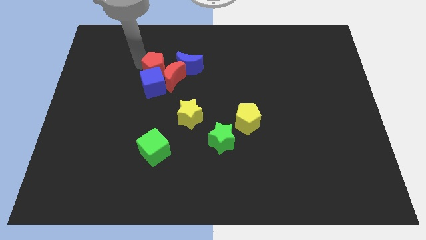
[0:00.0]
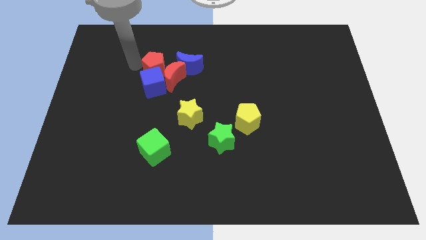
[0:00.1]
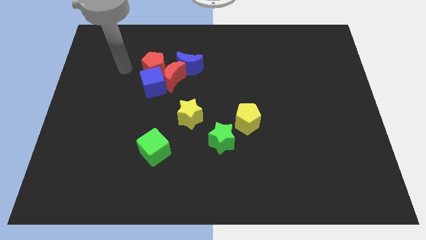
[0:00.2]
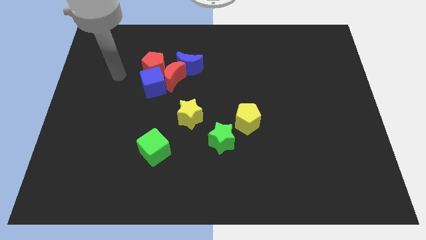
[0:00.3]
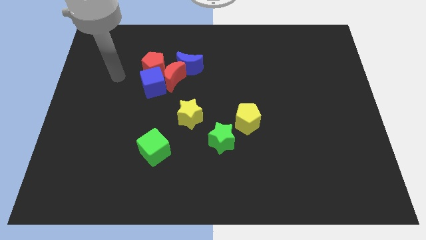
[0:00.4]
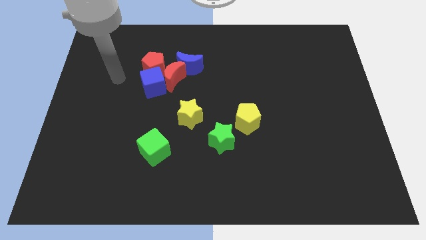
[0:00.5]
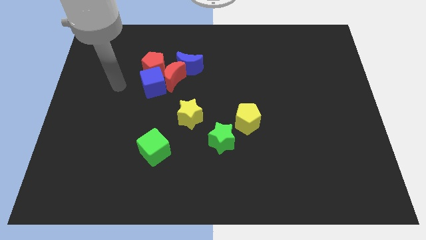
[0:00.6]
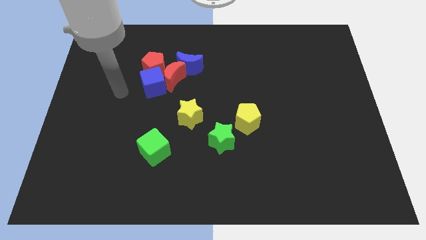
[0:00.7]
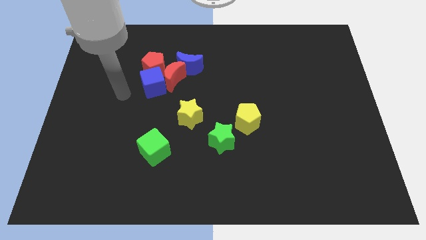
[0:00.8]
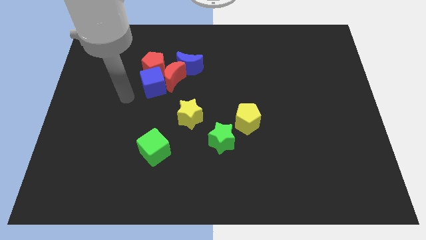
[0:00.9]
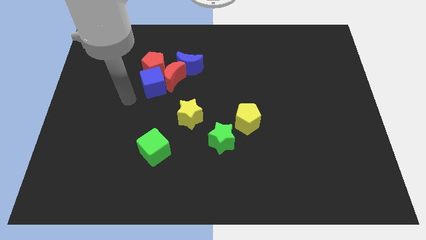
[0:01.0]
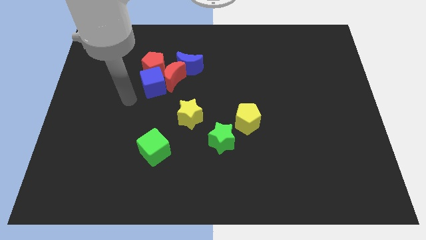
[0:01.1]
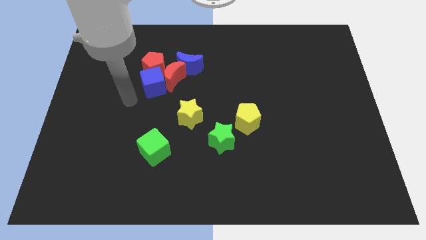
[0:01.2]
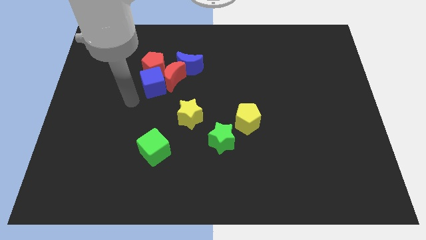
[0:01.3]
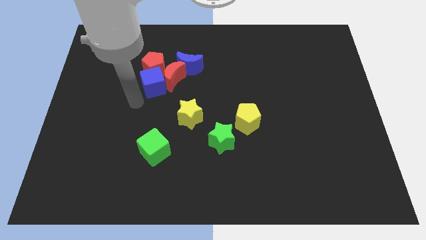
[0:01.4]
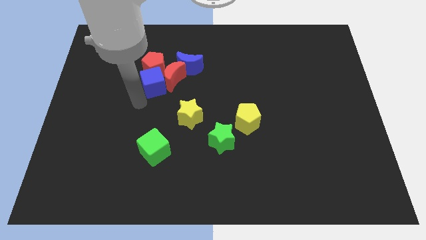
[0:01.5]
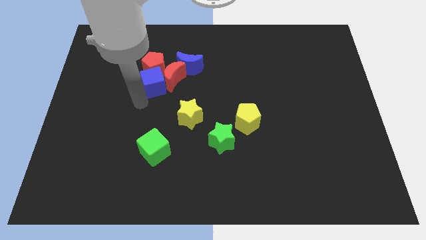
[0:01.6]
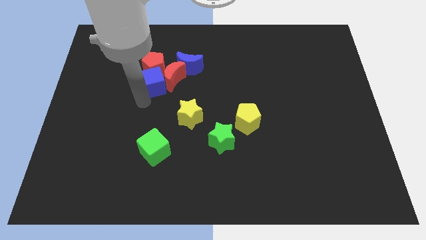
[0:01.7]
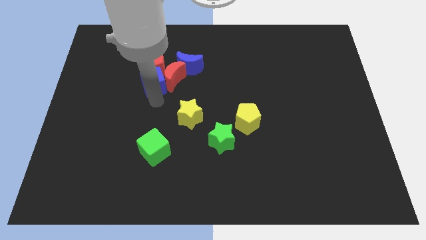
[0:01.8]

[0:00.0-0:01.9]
point your arm at the bottom of blue cube

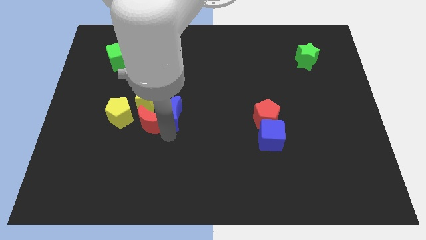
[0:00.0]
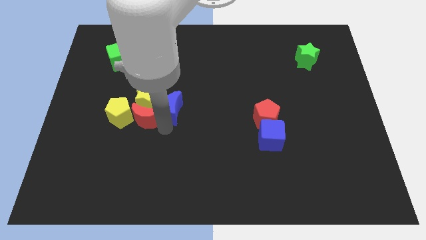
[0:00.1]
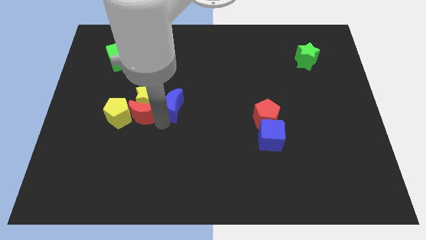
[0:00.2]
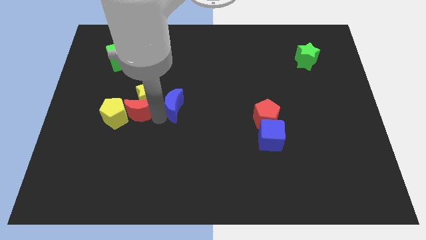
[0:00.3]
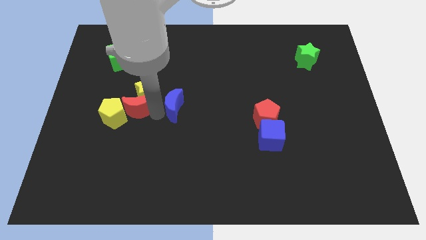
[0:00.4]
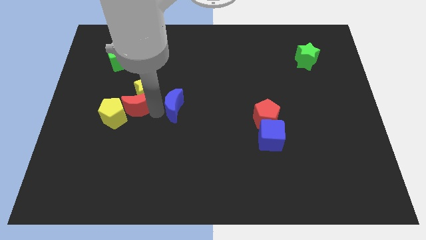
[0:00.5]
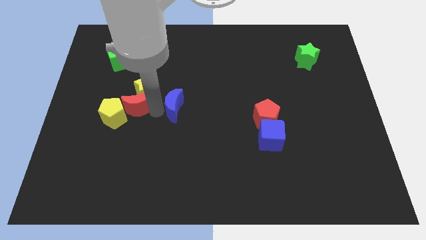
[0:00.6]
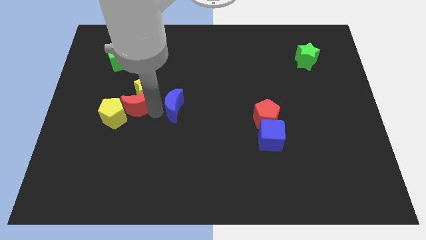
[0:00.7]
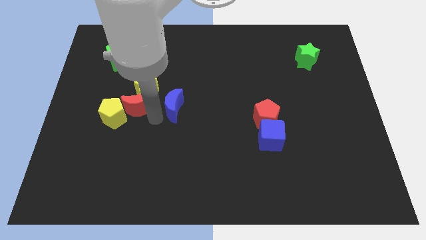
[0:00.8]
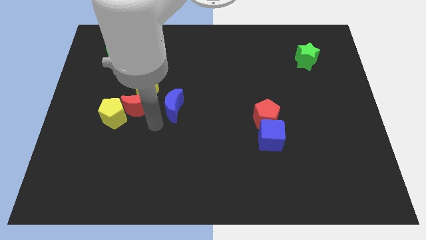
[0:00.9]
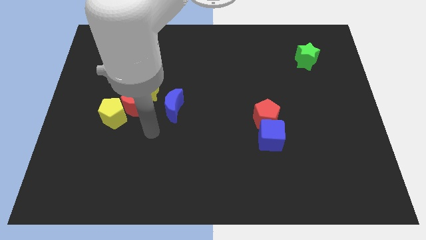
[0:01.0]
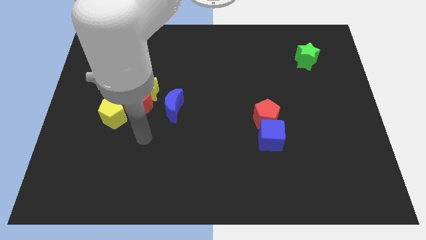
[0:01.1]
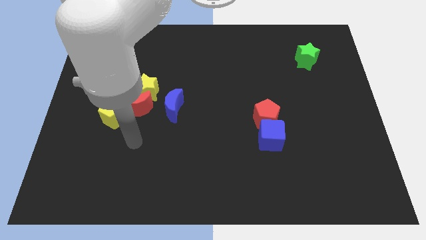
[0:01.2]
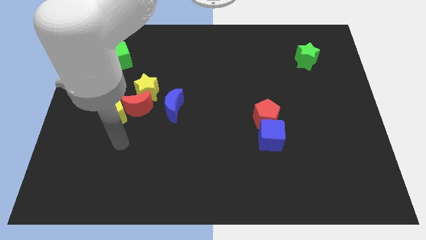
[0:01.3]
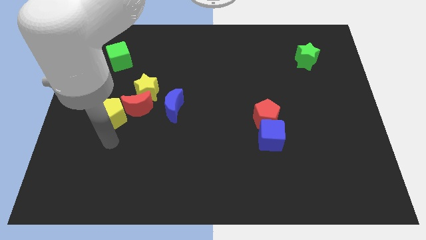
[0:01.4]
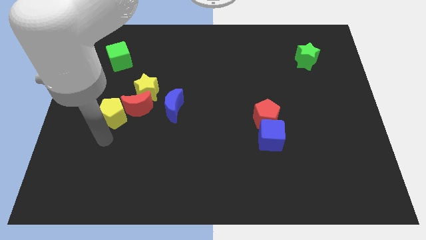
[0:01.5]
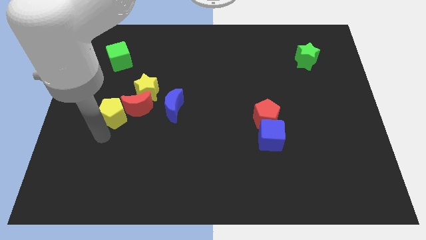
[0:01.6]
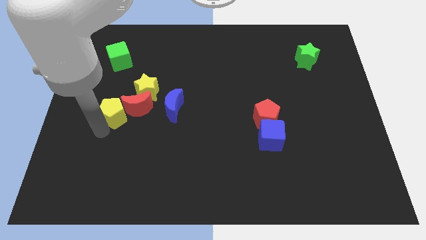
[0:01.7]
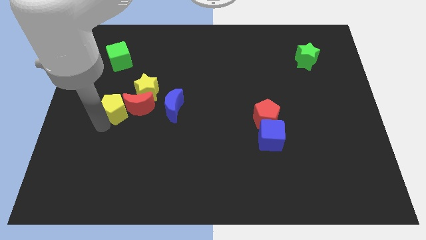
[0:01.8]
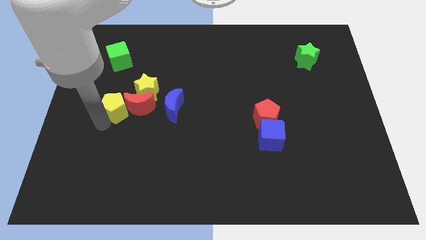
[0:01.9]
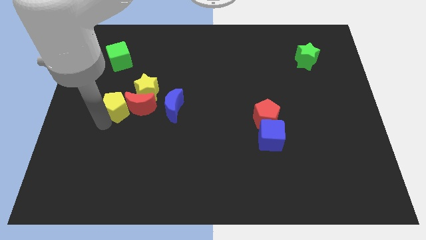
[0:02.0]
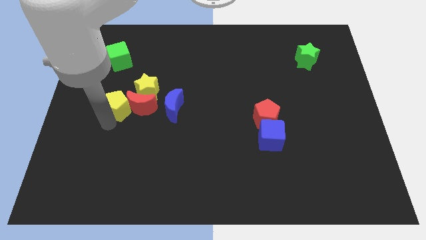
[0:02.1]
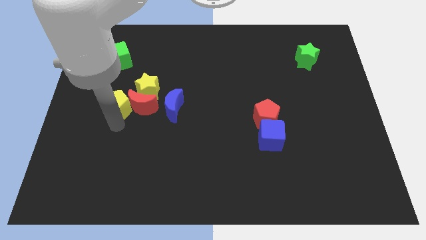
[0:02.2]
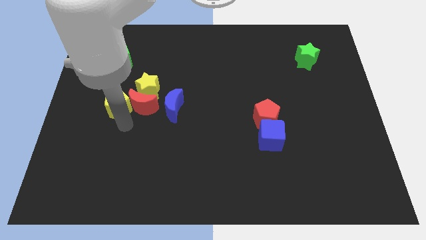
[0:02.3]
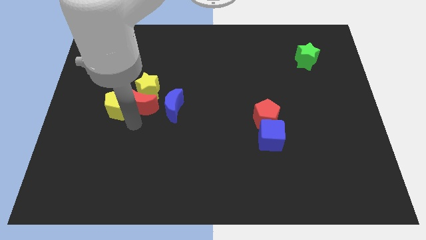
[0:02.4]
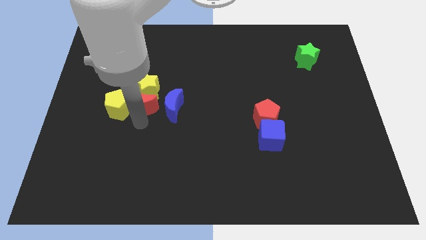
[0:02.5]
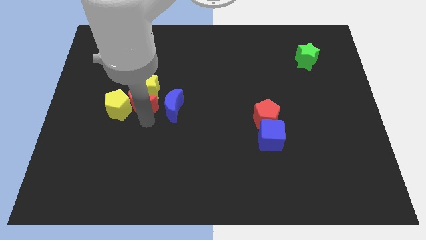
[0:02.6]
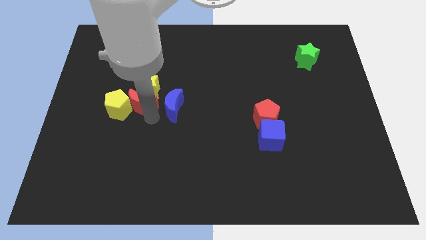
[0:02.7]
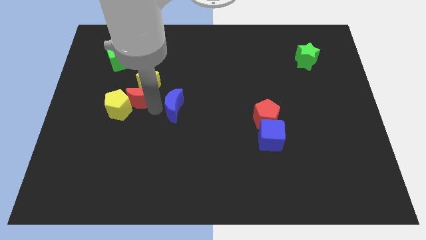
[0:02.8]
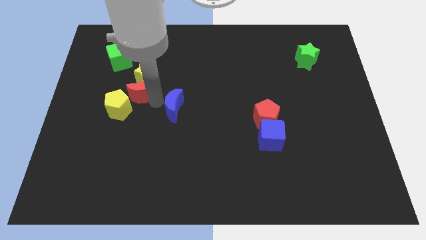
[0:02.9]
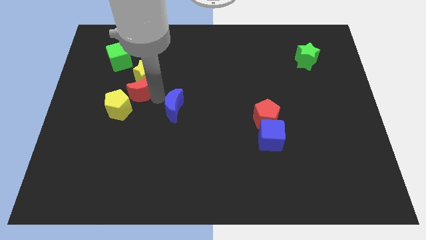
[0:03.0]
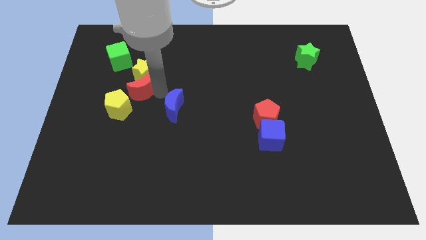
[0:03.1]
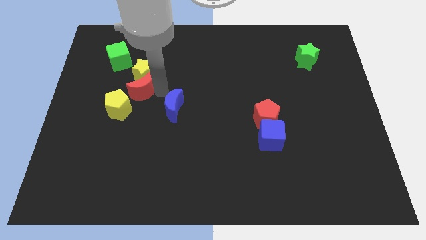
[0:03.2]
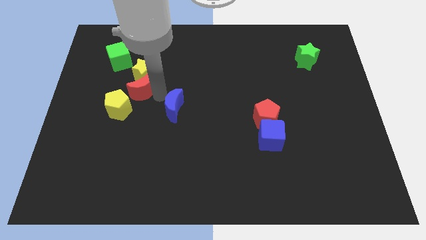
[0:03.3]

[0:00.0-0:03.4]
move the yellow star and the red moon towards the top left

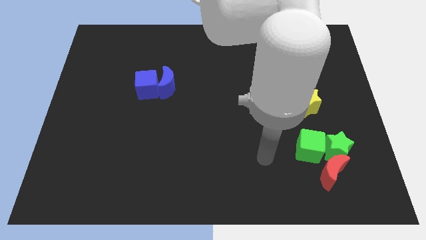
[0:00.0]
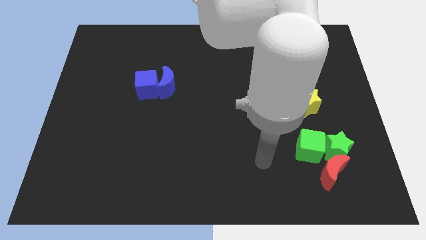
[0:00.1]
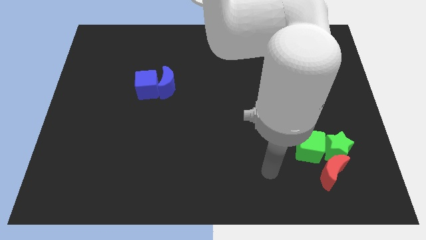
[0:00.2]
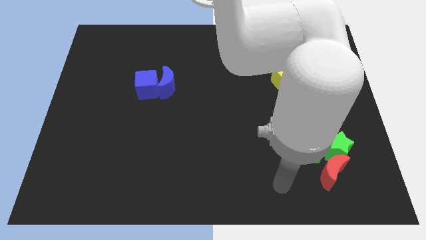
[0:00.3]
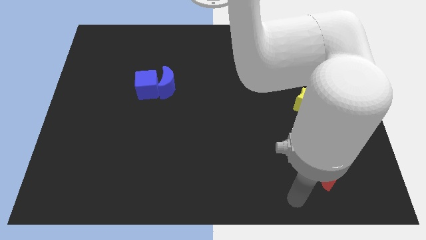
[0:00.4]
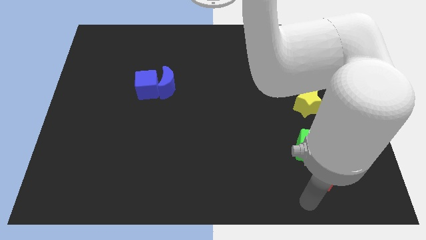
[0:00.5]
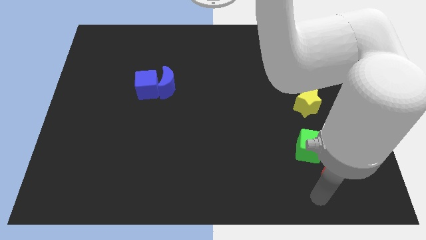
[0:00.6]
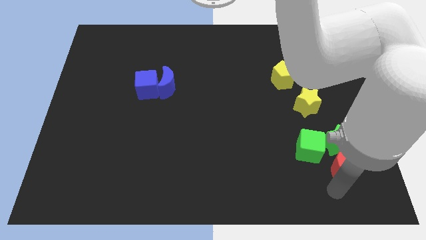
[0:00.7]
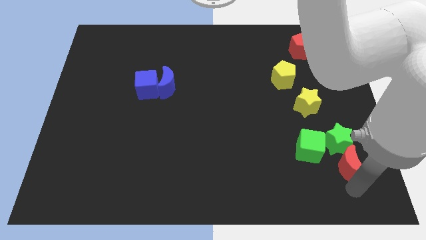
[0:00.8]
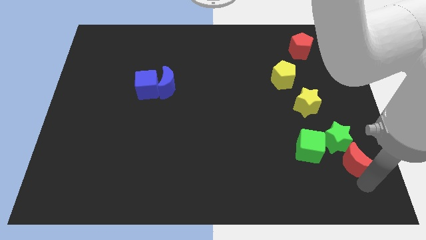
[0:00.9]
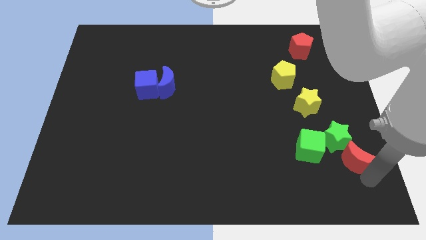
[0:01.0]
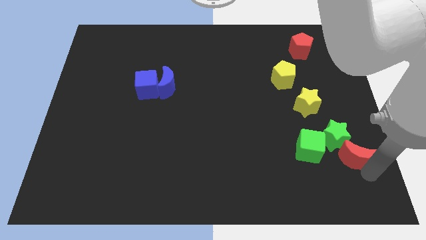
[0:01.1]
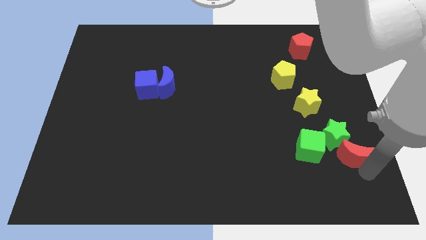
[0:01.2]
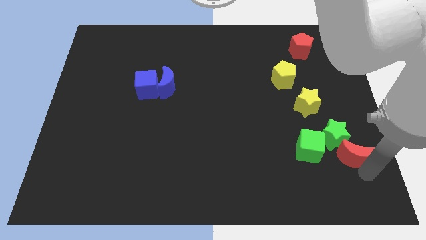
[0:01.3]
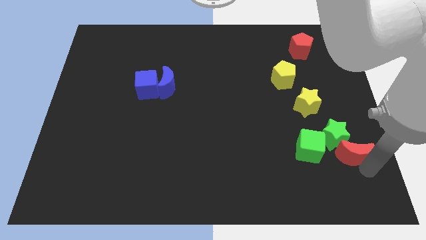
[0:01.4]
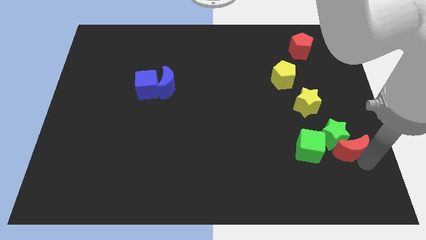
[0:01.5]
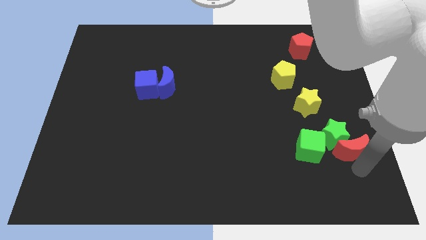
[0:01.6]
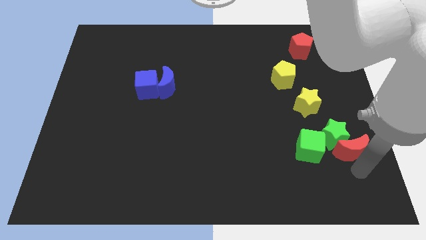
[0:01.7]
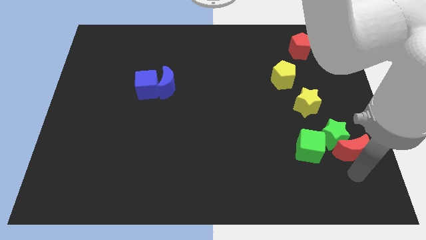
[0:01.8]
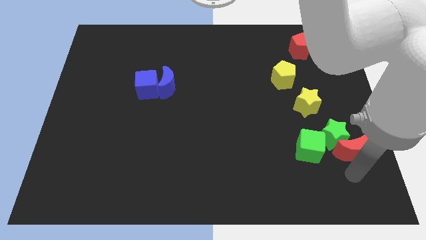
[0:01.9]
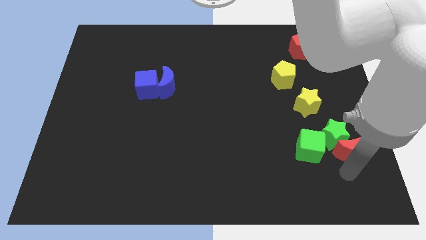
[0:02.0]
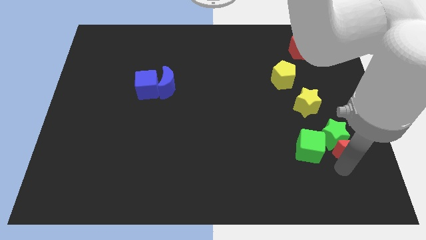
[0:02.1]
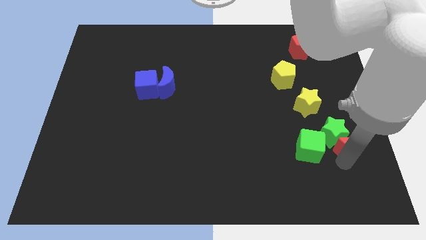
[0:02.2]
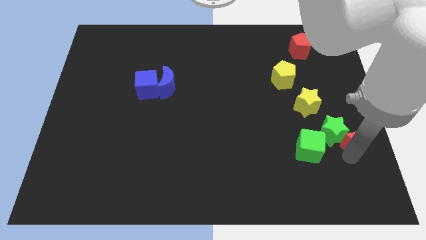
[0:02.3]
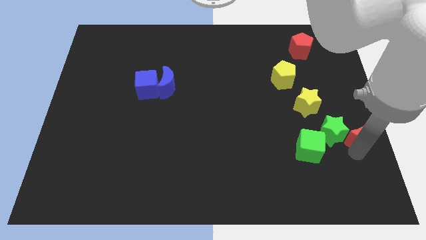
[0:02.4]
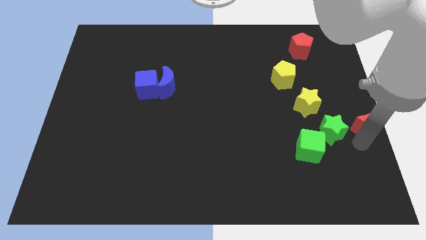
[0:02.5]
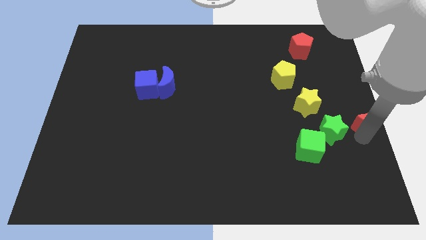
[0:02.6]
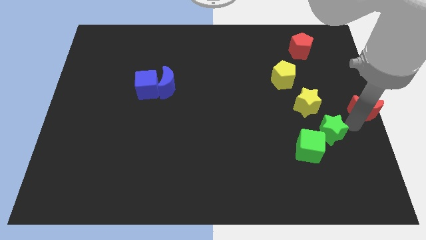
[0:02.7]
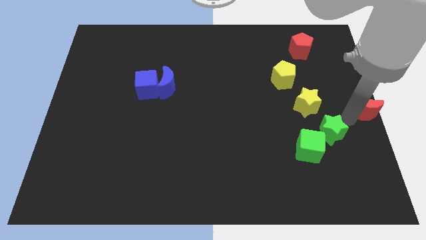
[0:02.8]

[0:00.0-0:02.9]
push the red crescent to the right center of the board

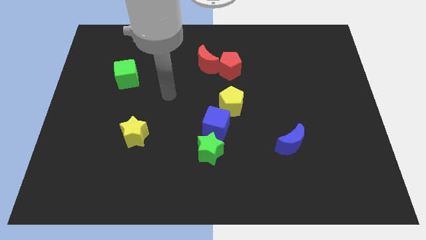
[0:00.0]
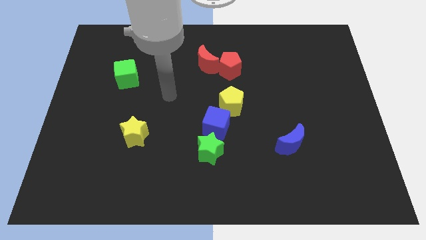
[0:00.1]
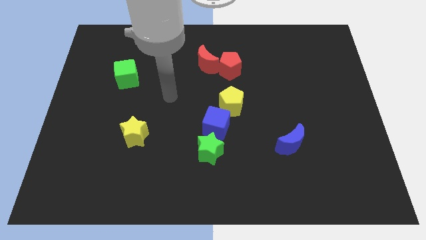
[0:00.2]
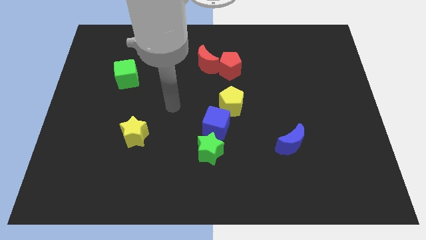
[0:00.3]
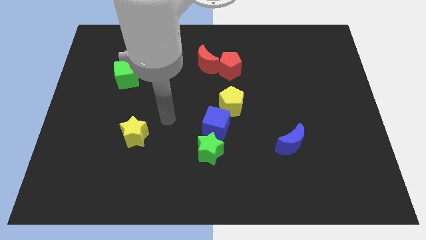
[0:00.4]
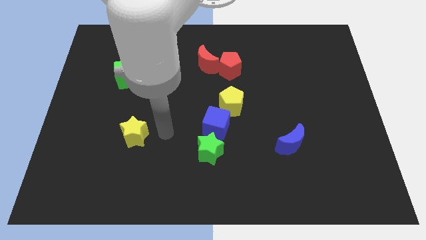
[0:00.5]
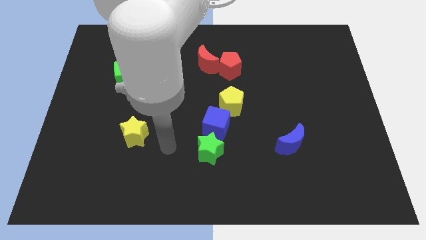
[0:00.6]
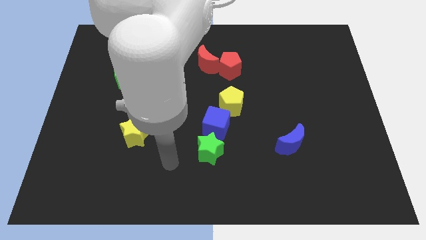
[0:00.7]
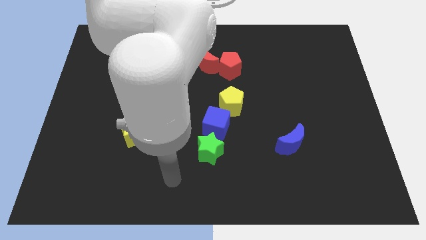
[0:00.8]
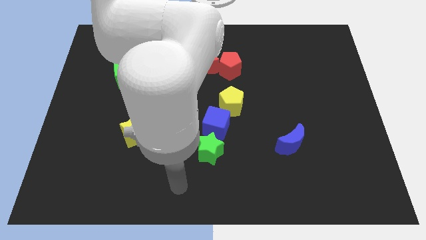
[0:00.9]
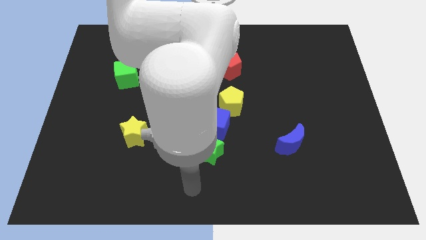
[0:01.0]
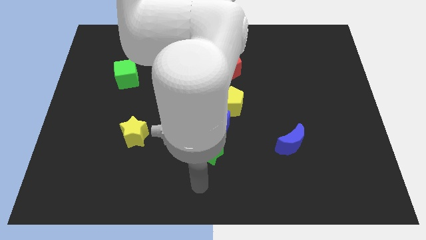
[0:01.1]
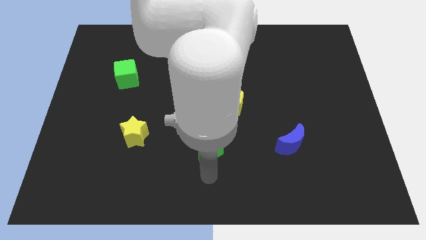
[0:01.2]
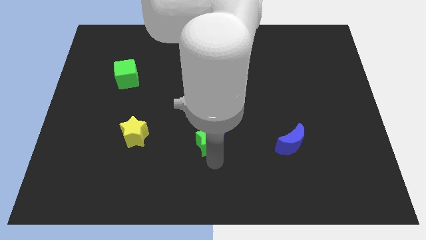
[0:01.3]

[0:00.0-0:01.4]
put your arm vertically below the green star
